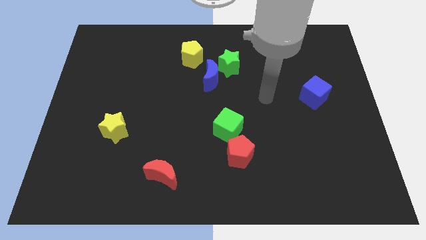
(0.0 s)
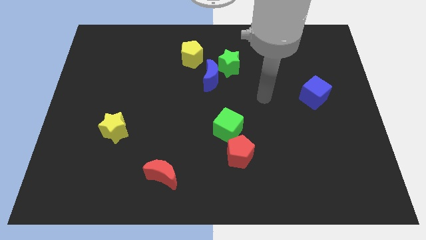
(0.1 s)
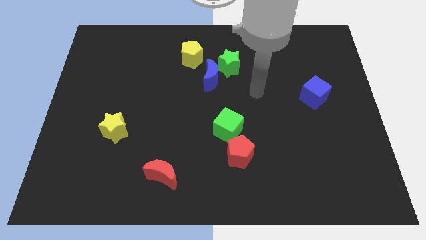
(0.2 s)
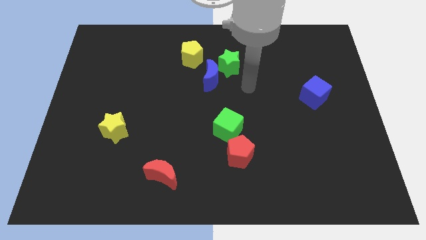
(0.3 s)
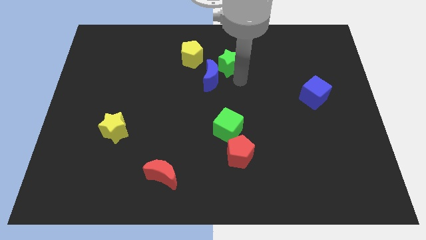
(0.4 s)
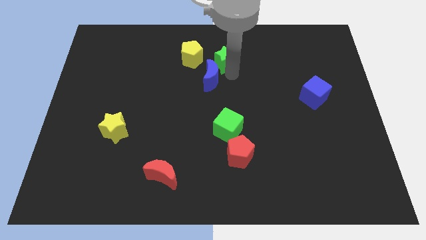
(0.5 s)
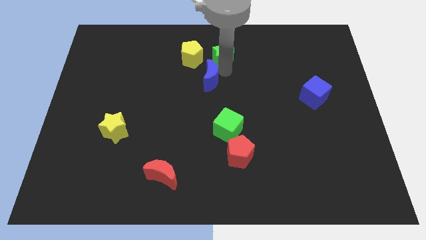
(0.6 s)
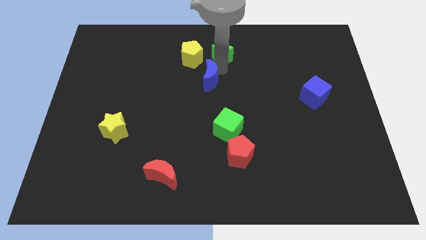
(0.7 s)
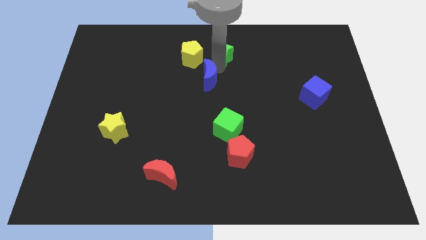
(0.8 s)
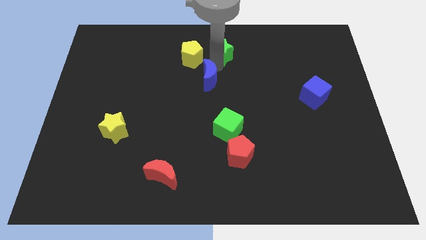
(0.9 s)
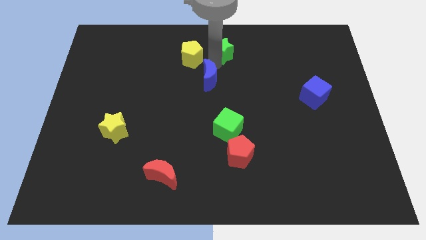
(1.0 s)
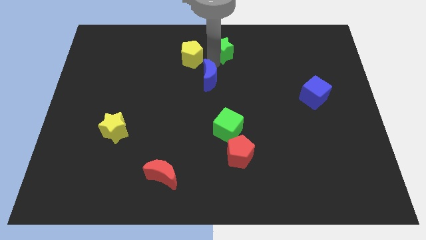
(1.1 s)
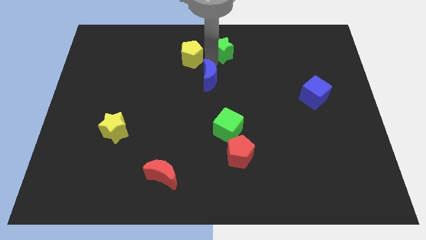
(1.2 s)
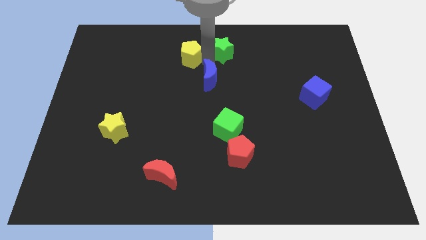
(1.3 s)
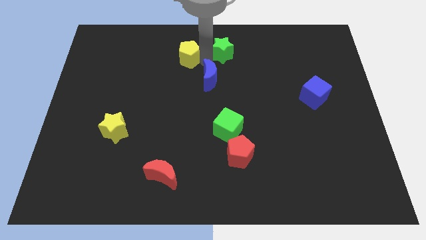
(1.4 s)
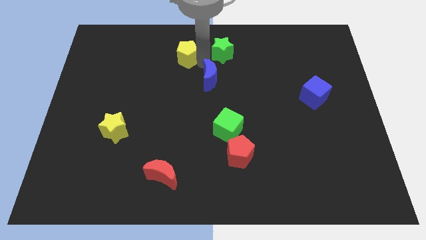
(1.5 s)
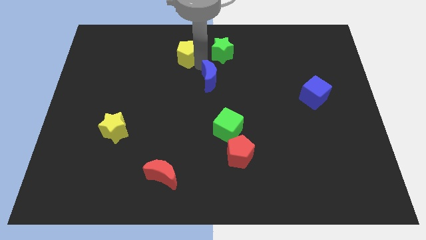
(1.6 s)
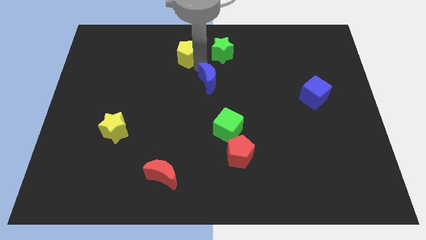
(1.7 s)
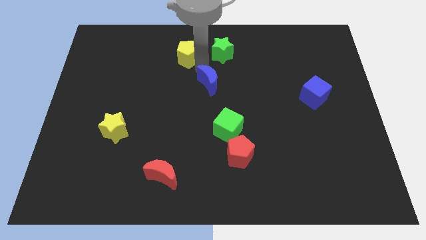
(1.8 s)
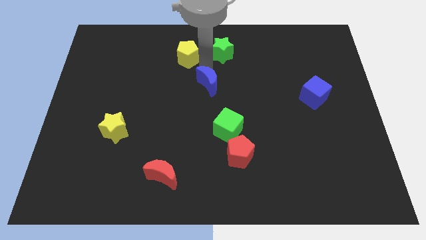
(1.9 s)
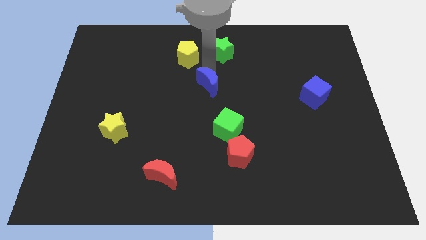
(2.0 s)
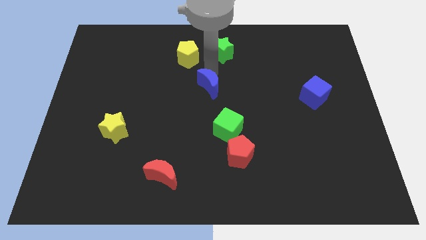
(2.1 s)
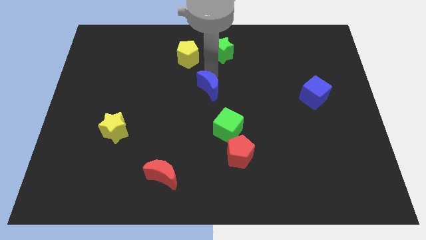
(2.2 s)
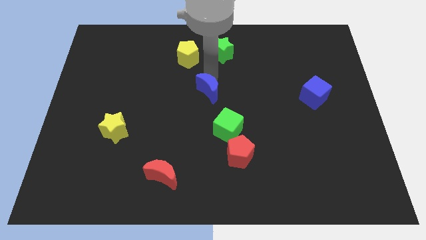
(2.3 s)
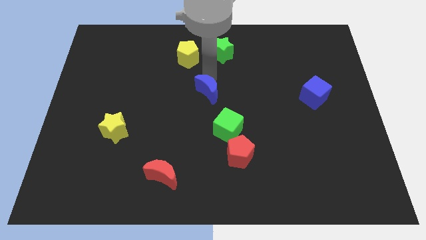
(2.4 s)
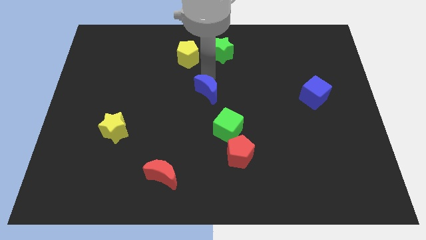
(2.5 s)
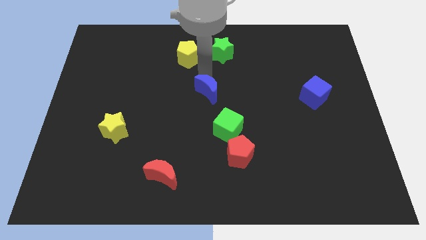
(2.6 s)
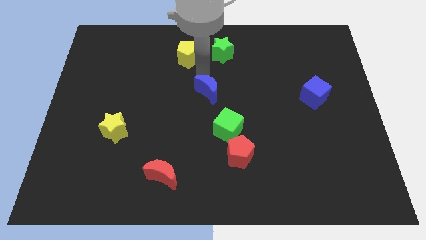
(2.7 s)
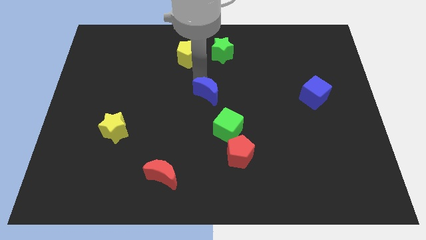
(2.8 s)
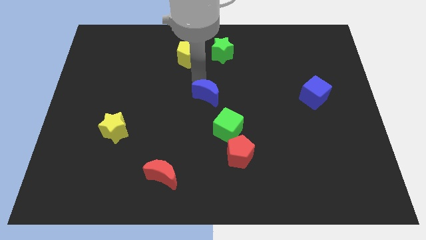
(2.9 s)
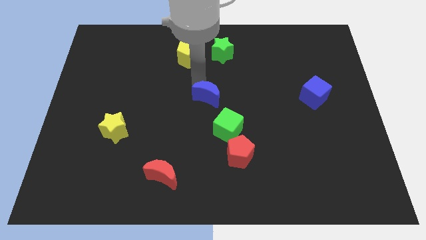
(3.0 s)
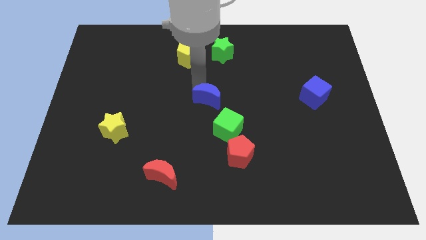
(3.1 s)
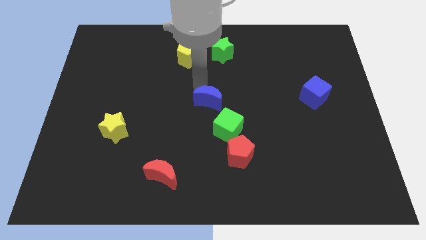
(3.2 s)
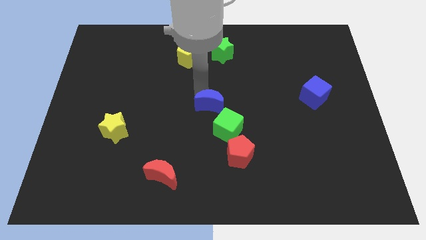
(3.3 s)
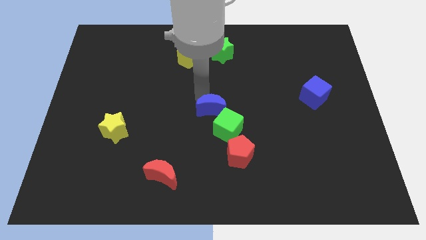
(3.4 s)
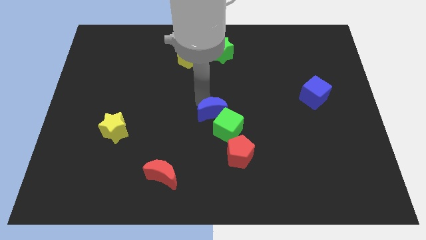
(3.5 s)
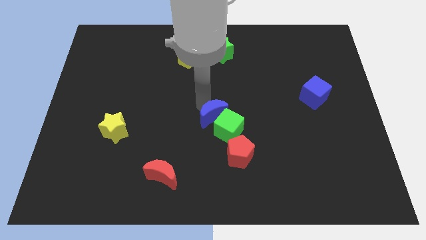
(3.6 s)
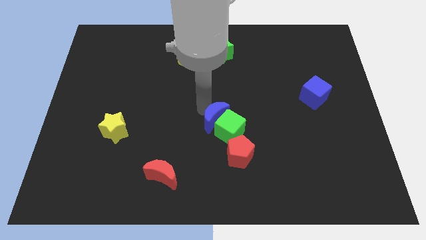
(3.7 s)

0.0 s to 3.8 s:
slide the blue moon to the green cube

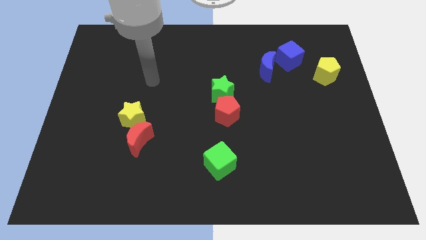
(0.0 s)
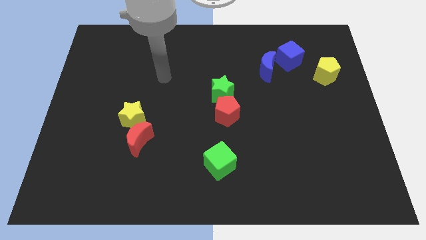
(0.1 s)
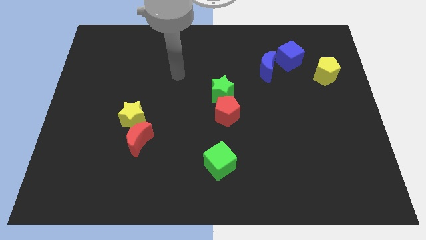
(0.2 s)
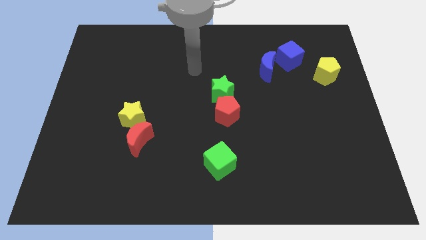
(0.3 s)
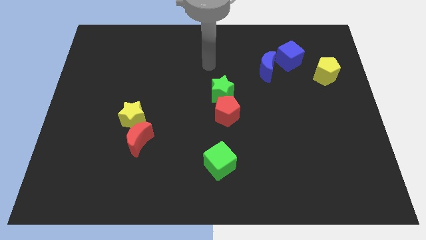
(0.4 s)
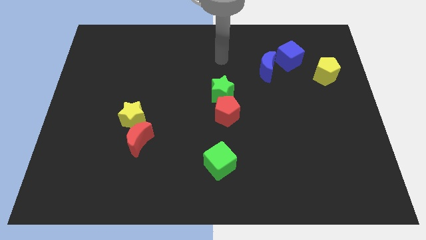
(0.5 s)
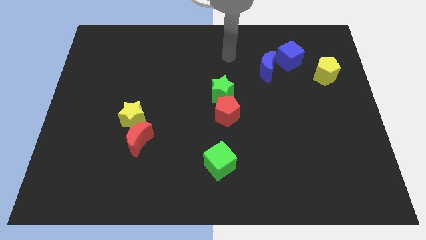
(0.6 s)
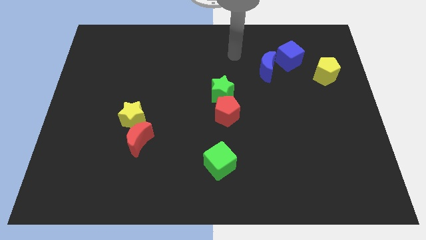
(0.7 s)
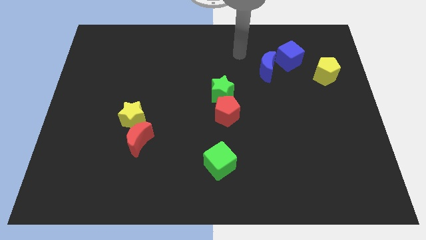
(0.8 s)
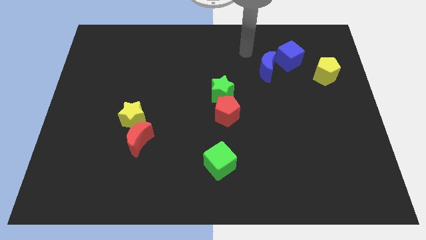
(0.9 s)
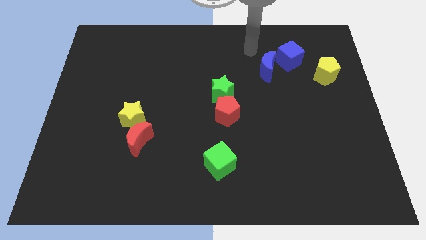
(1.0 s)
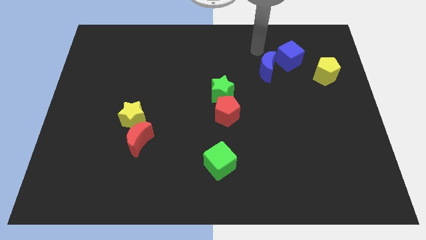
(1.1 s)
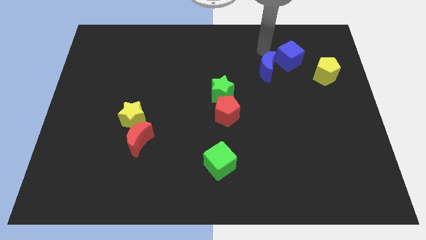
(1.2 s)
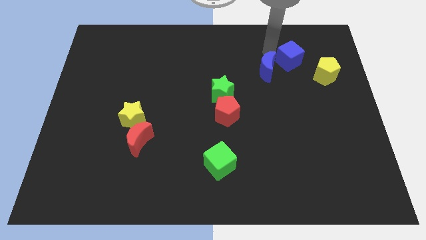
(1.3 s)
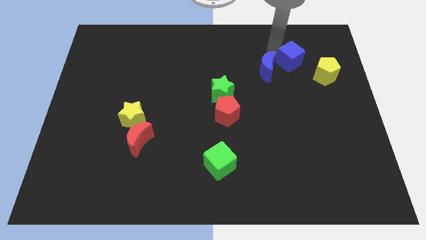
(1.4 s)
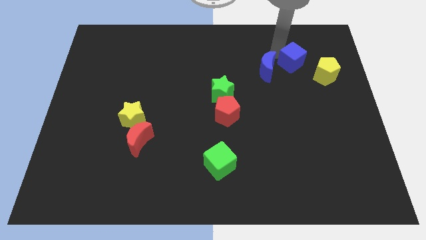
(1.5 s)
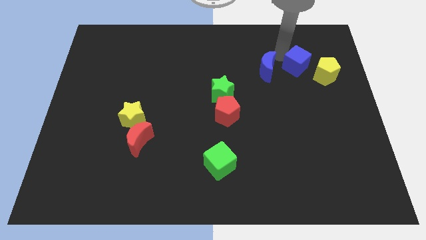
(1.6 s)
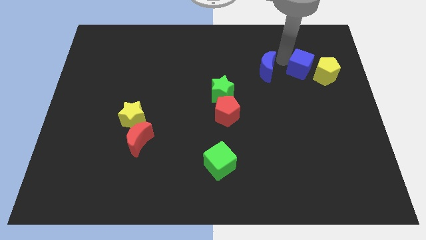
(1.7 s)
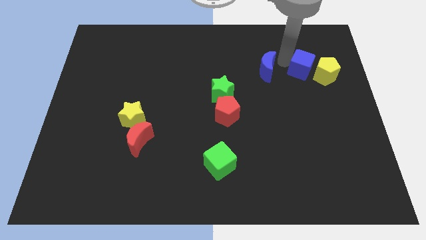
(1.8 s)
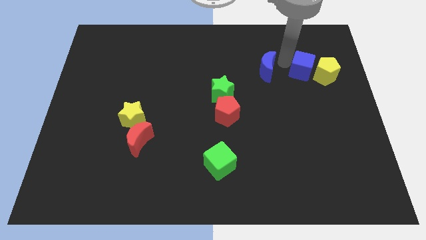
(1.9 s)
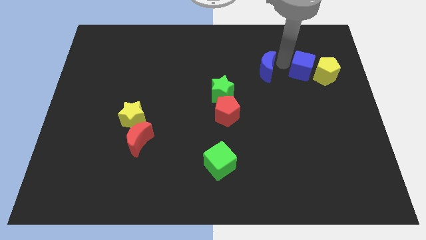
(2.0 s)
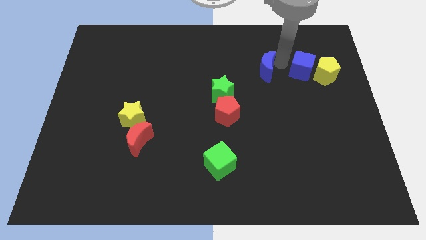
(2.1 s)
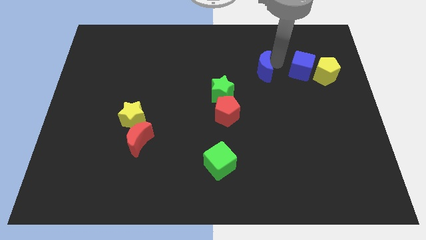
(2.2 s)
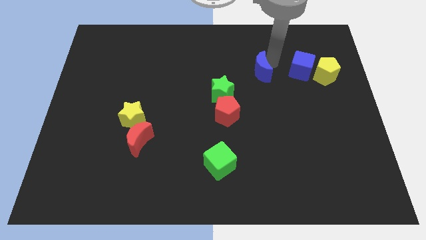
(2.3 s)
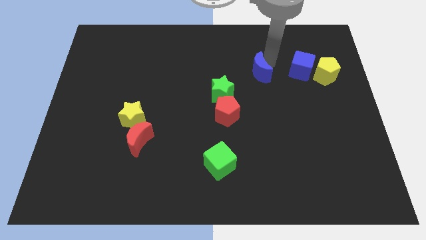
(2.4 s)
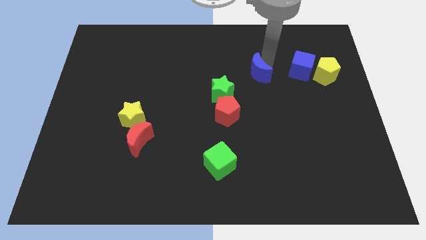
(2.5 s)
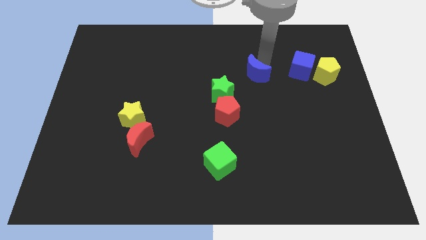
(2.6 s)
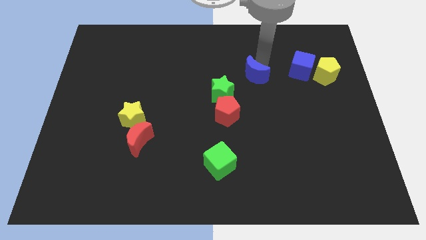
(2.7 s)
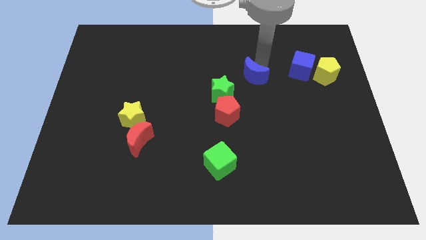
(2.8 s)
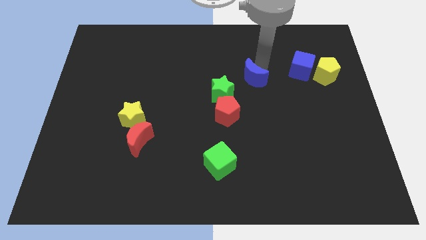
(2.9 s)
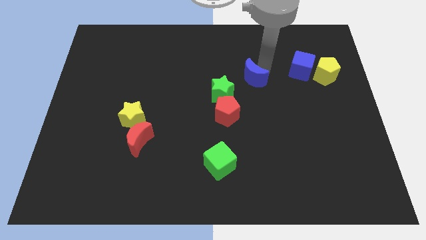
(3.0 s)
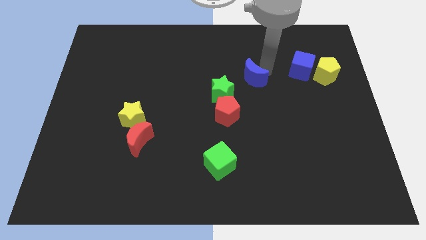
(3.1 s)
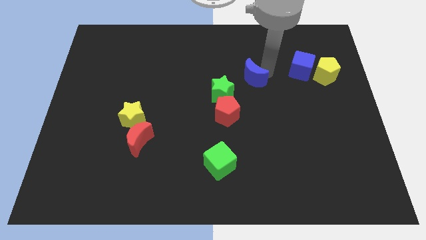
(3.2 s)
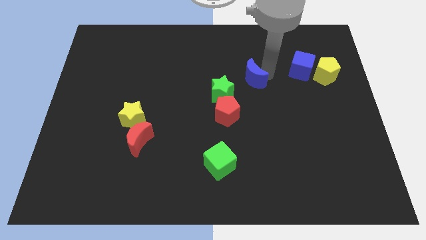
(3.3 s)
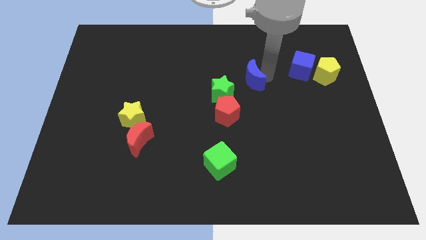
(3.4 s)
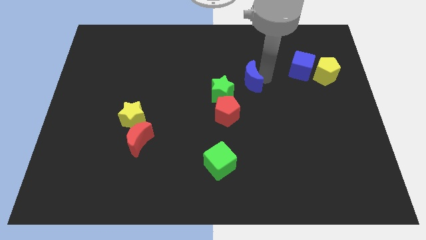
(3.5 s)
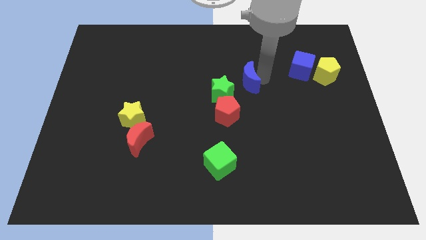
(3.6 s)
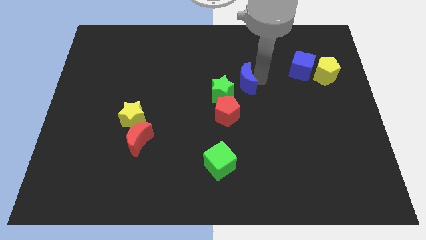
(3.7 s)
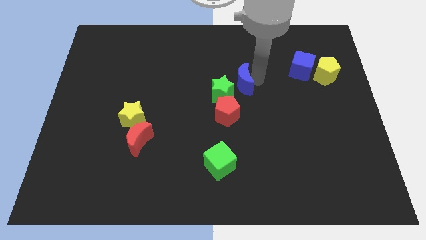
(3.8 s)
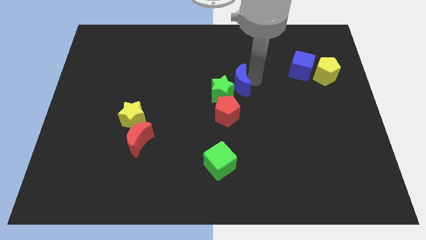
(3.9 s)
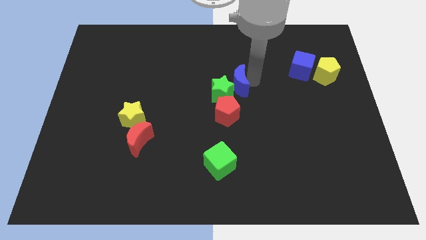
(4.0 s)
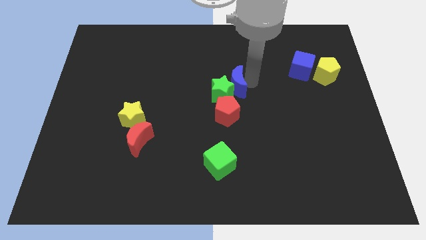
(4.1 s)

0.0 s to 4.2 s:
push the blue moon towards the green star

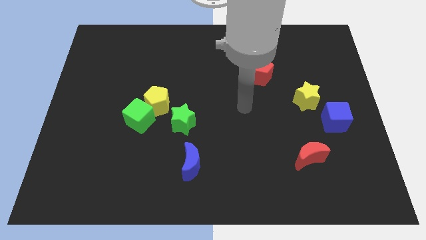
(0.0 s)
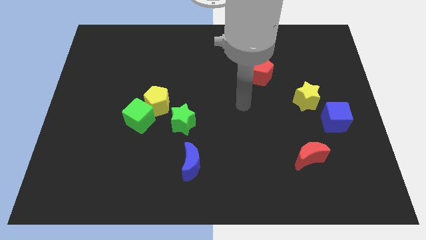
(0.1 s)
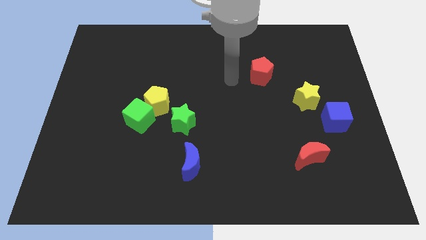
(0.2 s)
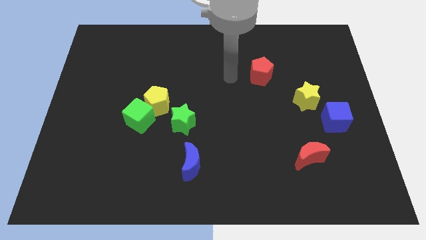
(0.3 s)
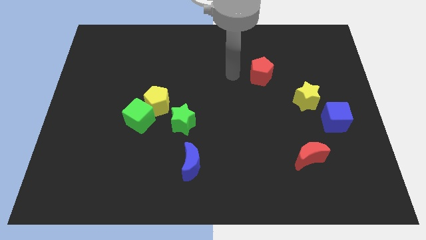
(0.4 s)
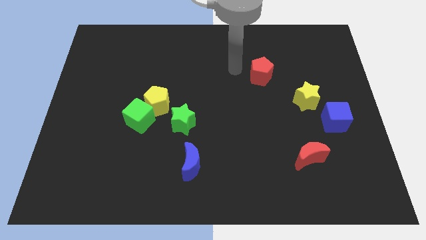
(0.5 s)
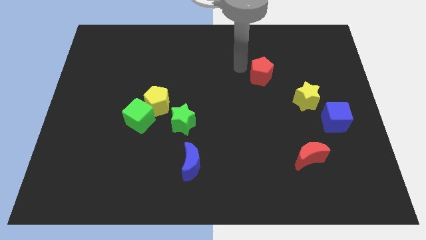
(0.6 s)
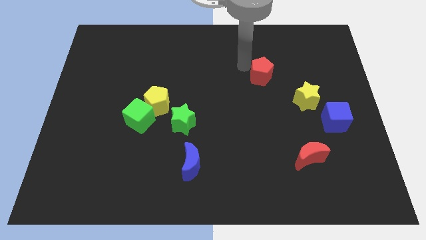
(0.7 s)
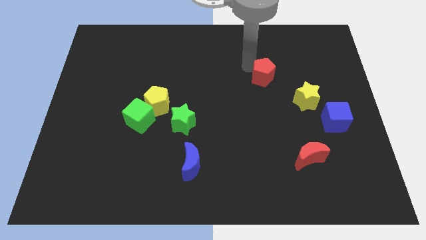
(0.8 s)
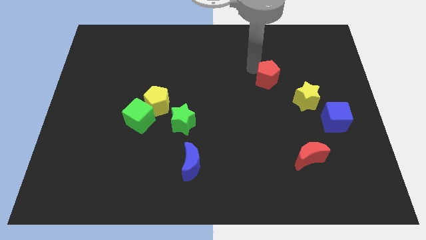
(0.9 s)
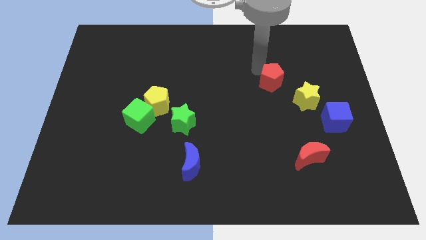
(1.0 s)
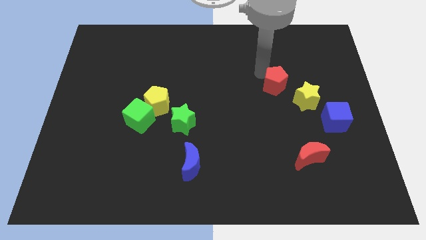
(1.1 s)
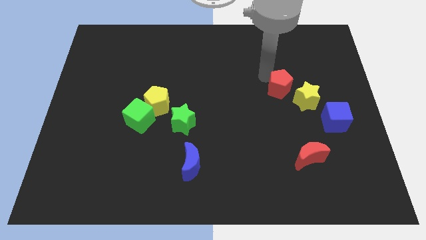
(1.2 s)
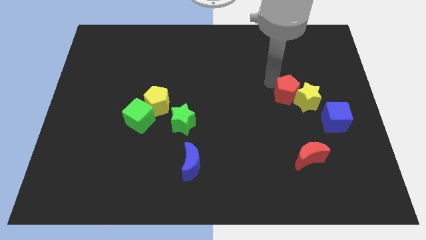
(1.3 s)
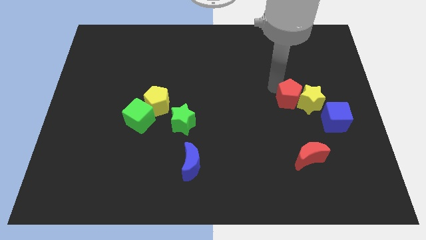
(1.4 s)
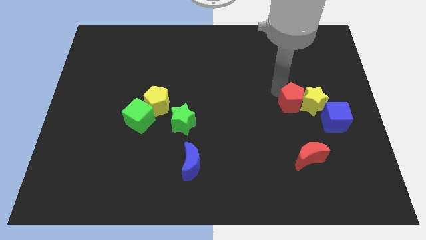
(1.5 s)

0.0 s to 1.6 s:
put the red pentagon towards the yellow star
